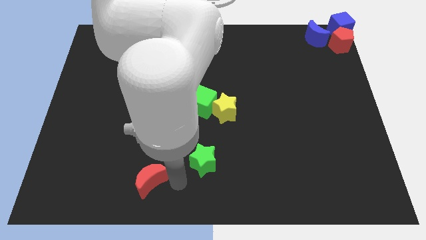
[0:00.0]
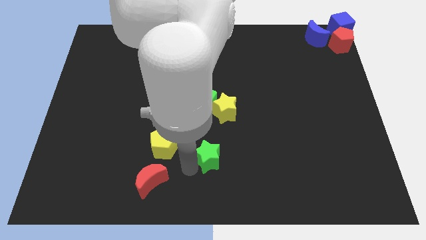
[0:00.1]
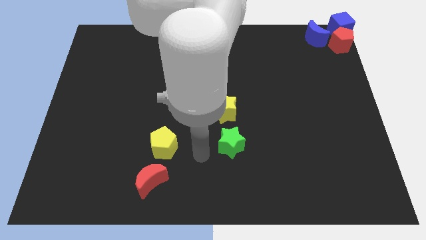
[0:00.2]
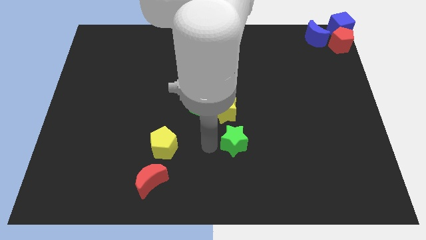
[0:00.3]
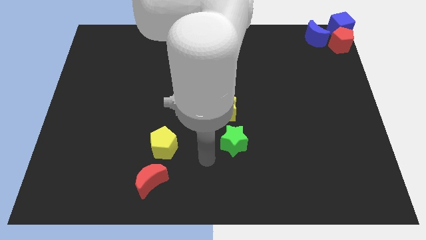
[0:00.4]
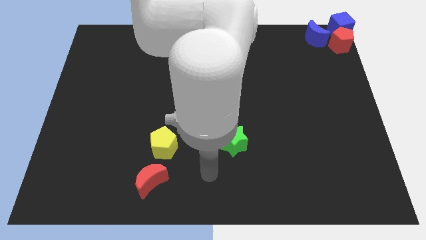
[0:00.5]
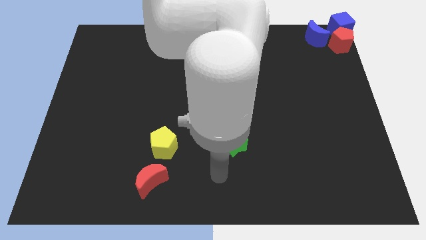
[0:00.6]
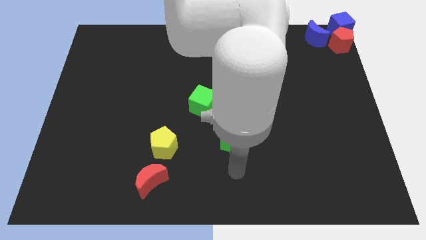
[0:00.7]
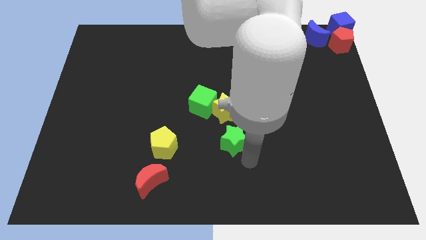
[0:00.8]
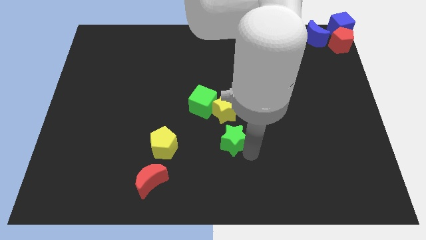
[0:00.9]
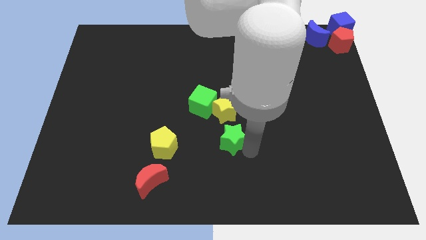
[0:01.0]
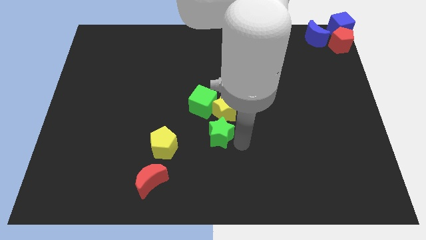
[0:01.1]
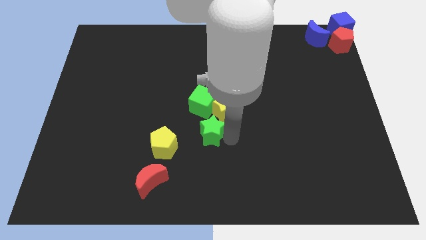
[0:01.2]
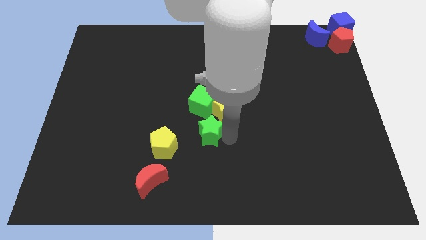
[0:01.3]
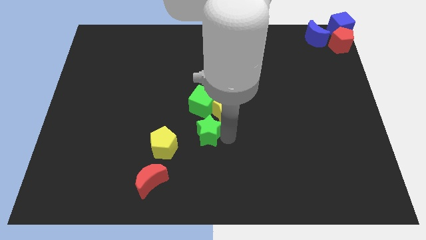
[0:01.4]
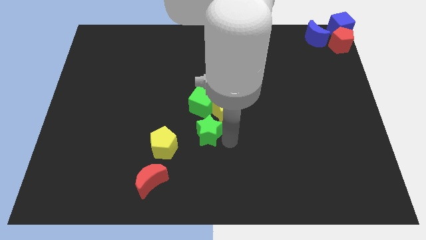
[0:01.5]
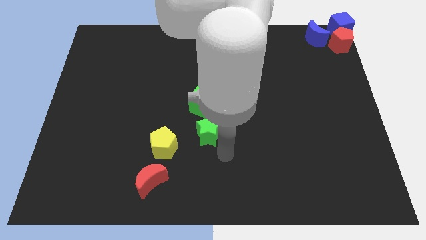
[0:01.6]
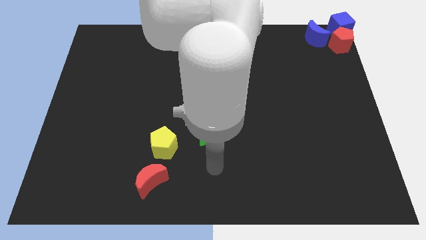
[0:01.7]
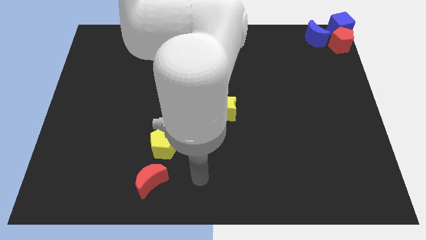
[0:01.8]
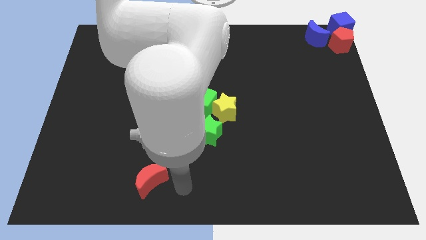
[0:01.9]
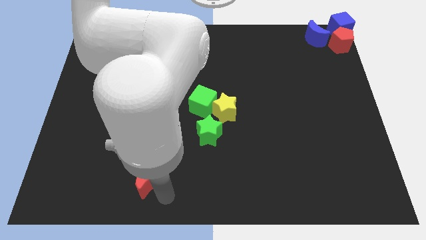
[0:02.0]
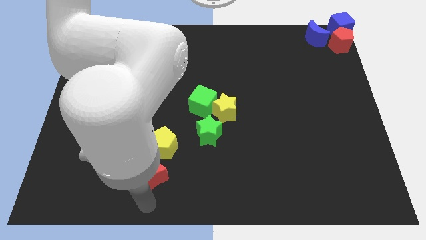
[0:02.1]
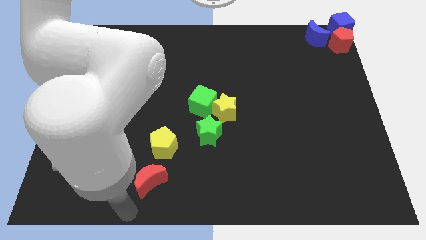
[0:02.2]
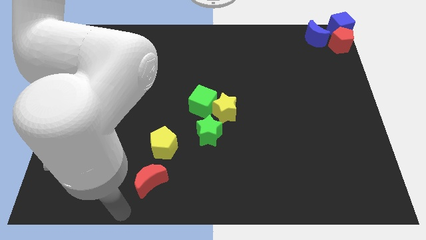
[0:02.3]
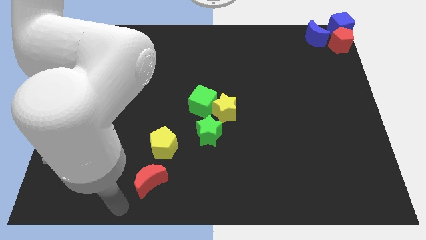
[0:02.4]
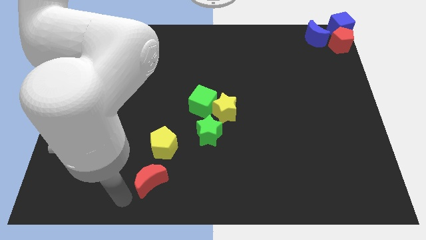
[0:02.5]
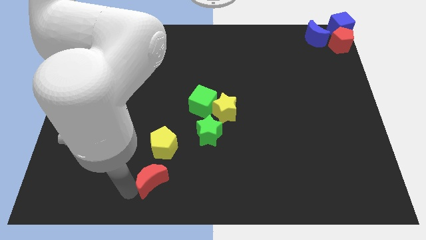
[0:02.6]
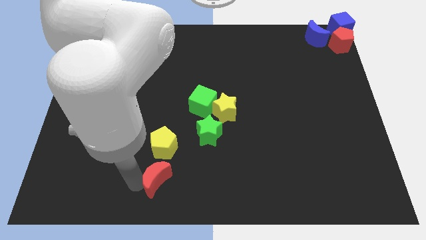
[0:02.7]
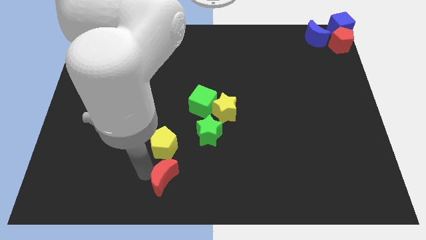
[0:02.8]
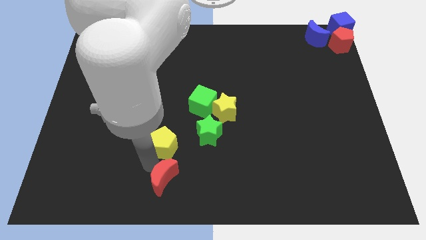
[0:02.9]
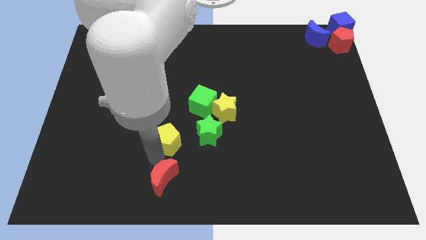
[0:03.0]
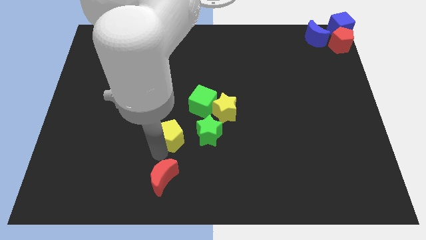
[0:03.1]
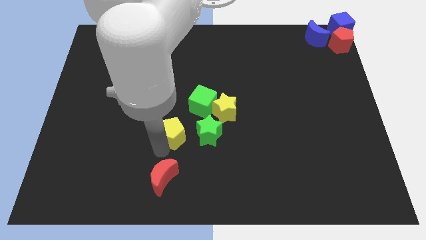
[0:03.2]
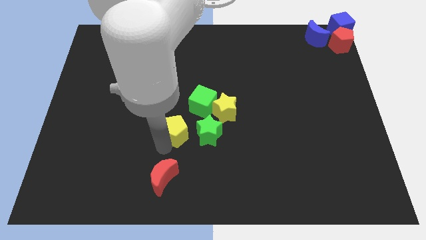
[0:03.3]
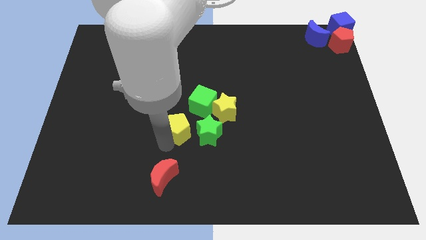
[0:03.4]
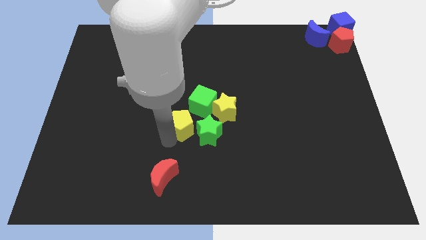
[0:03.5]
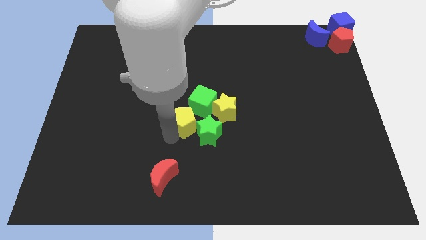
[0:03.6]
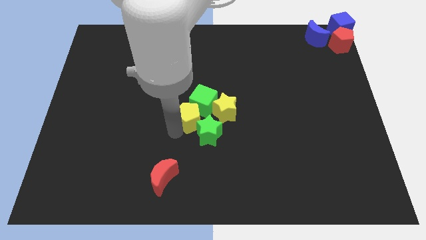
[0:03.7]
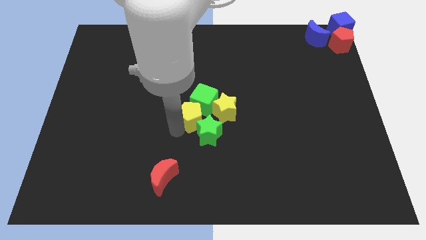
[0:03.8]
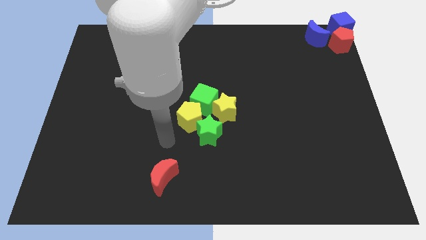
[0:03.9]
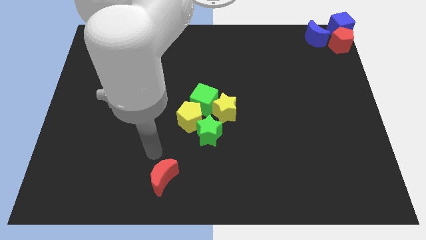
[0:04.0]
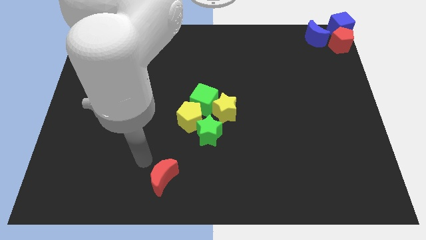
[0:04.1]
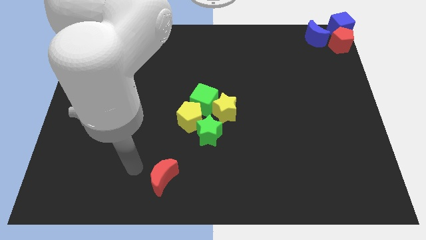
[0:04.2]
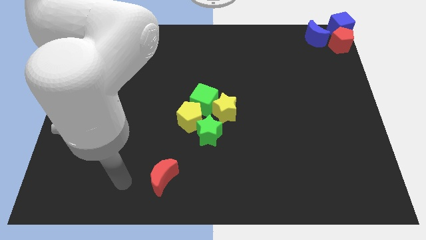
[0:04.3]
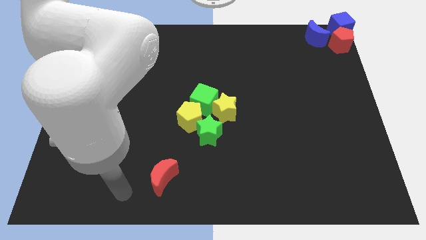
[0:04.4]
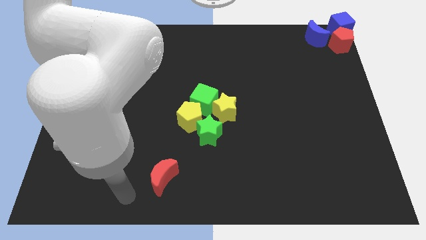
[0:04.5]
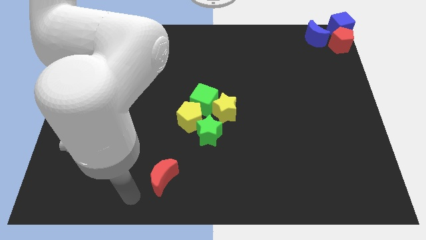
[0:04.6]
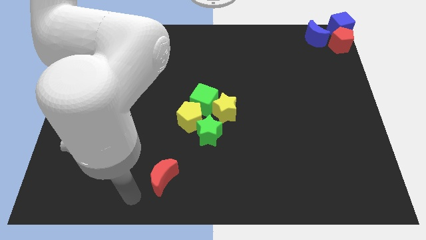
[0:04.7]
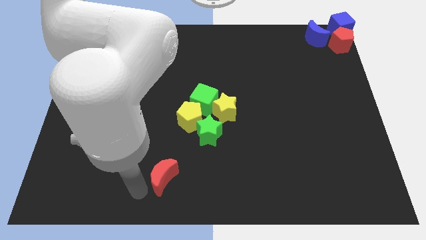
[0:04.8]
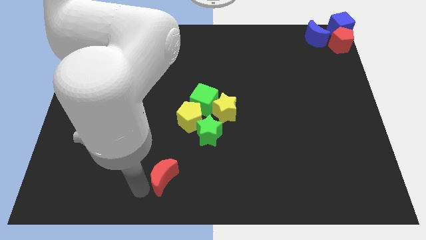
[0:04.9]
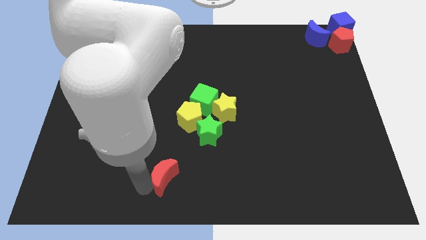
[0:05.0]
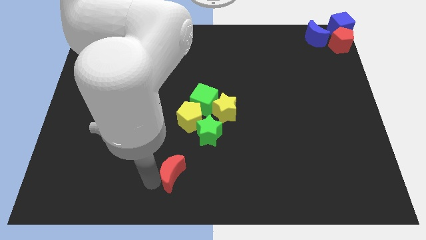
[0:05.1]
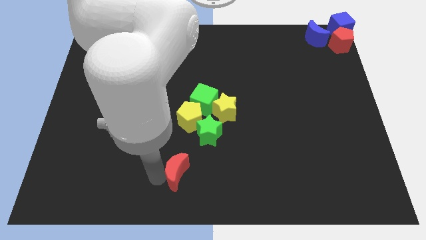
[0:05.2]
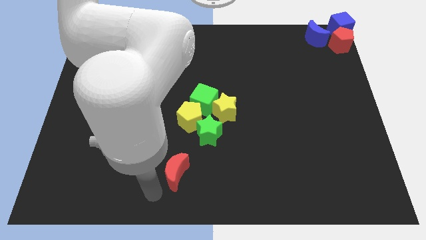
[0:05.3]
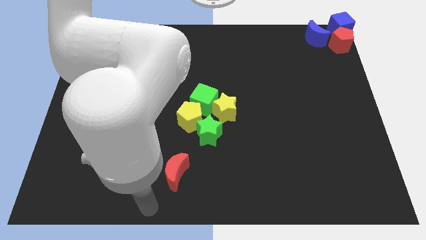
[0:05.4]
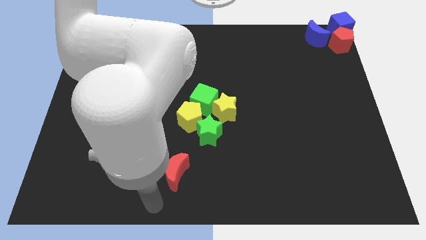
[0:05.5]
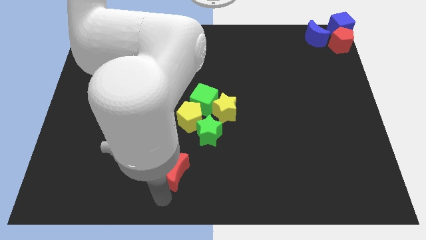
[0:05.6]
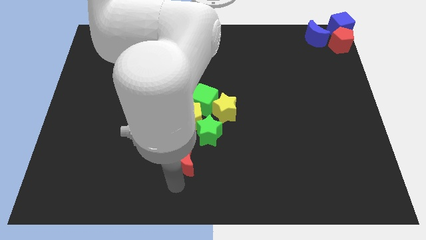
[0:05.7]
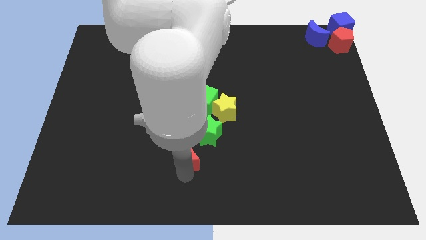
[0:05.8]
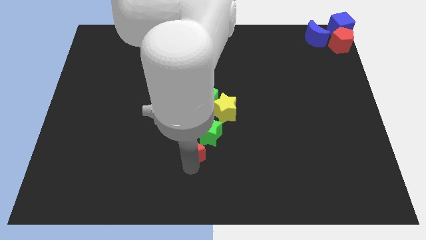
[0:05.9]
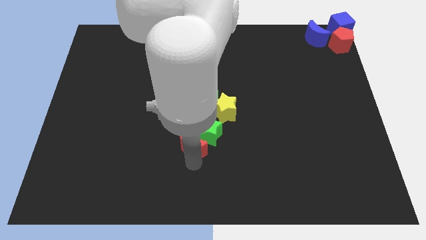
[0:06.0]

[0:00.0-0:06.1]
place the green star red crescent and the yellow pentagon to the center of the board

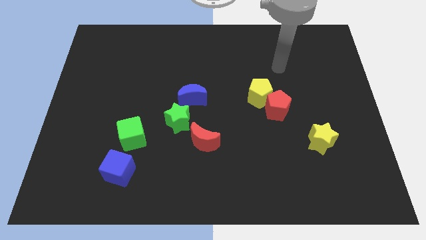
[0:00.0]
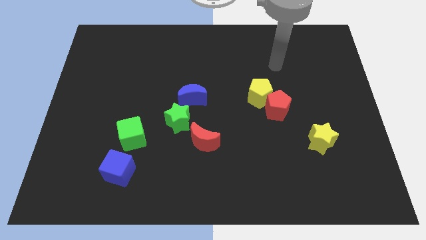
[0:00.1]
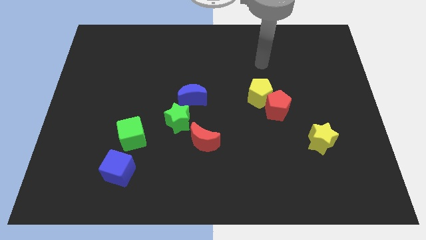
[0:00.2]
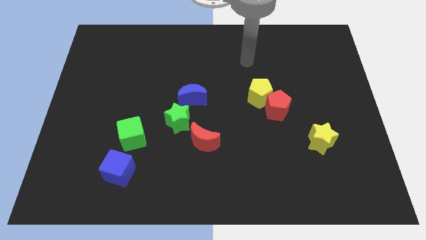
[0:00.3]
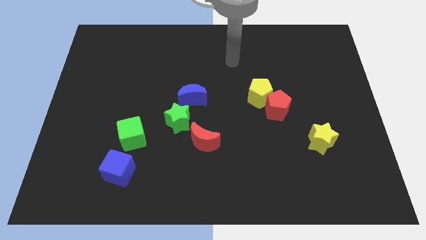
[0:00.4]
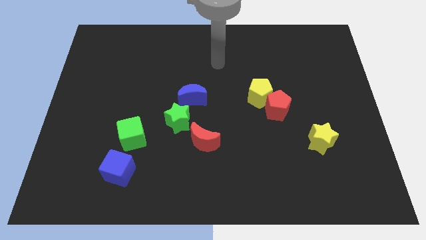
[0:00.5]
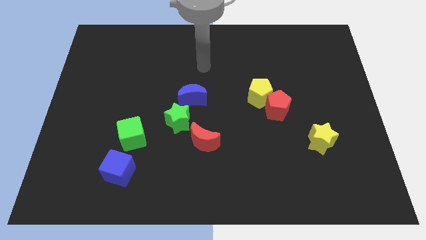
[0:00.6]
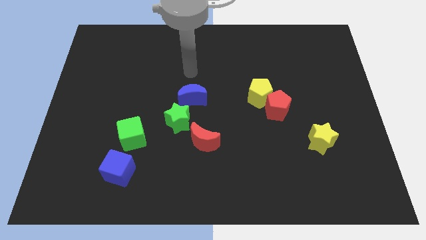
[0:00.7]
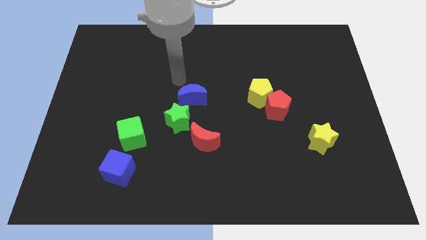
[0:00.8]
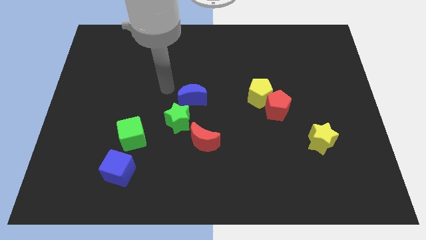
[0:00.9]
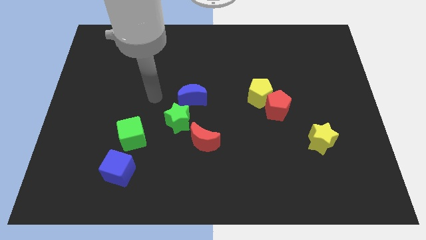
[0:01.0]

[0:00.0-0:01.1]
move your arm towards the center left of the board

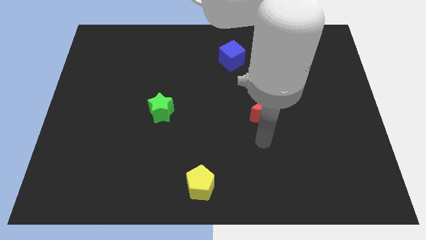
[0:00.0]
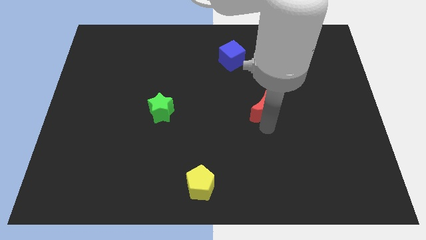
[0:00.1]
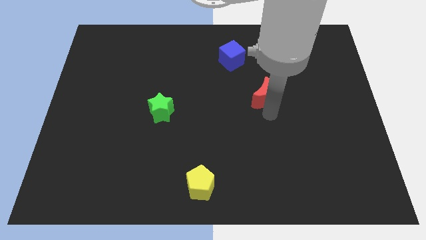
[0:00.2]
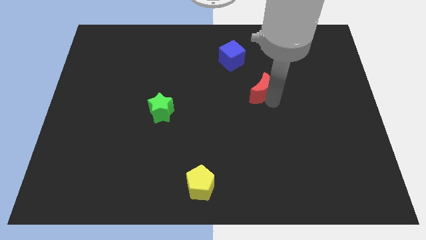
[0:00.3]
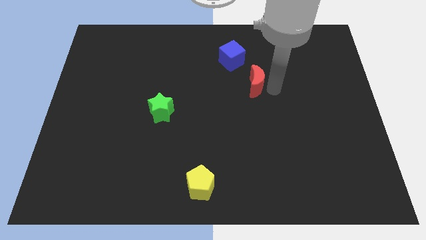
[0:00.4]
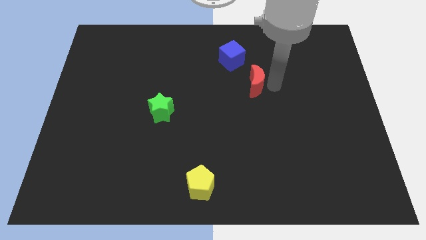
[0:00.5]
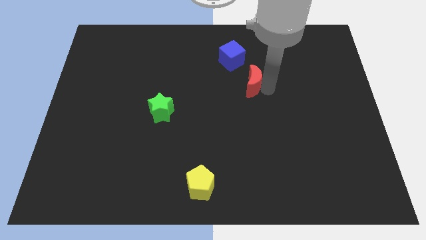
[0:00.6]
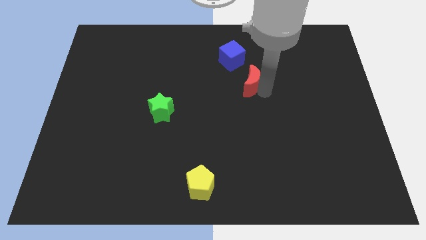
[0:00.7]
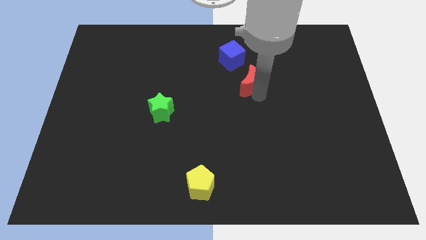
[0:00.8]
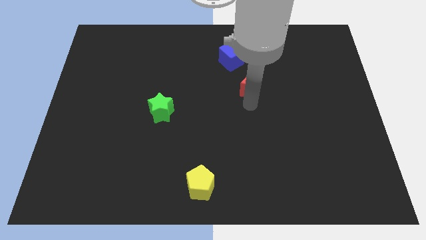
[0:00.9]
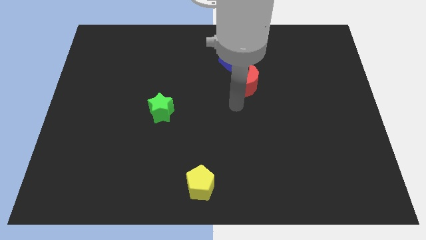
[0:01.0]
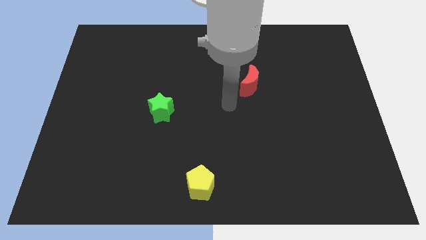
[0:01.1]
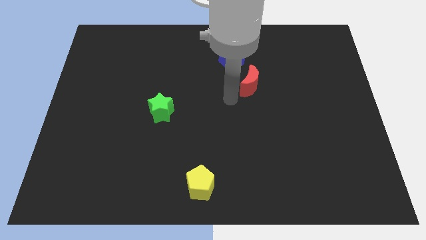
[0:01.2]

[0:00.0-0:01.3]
move the red block towards the blue block

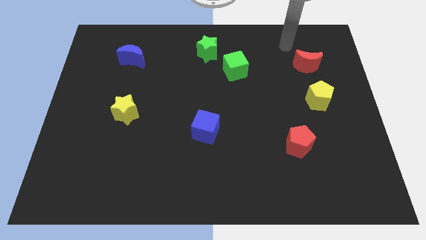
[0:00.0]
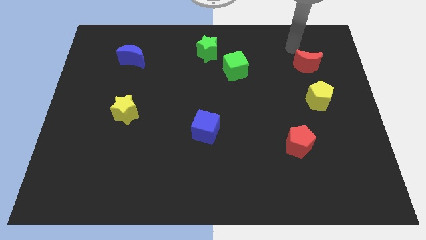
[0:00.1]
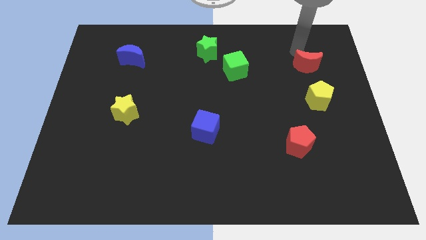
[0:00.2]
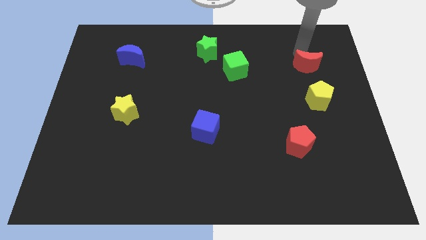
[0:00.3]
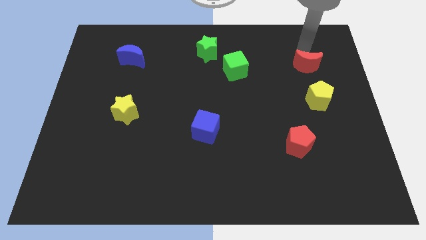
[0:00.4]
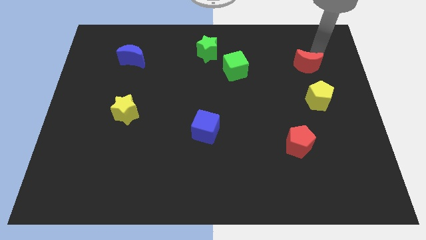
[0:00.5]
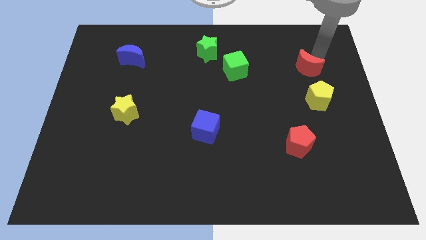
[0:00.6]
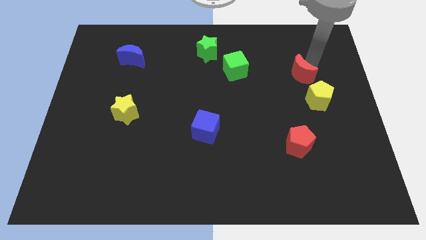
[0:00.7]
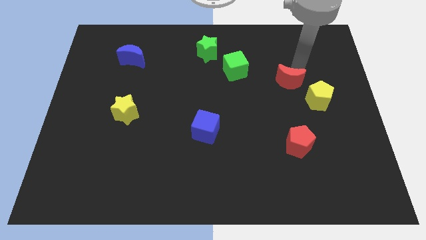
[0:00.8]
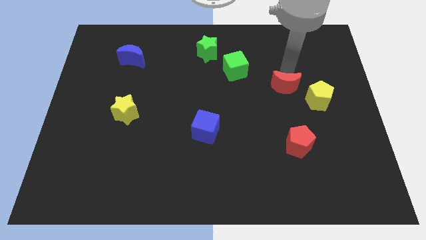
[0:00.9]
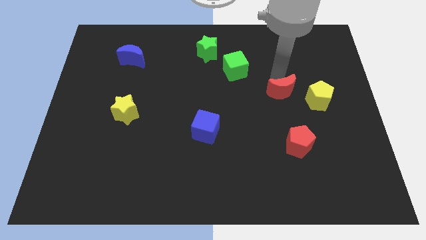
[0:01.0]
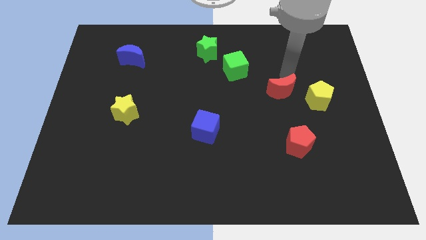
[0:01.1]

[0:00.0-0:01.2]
place the red crescent between the yellow pentagon and green cube
